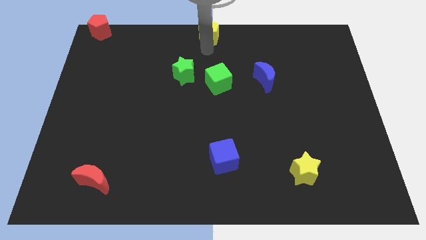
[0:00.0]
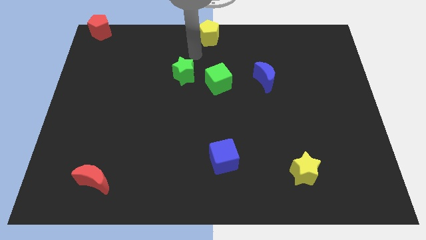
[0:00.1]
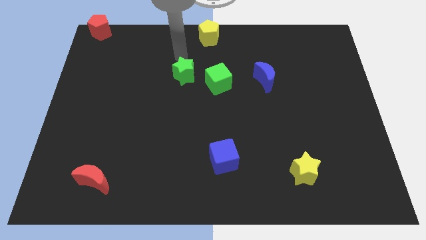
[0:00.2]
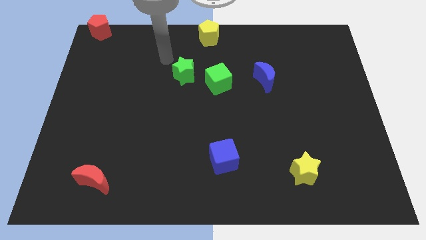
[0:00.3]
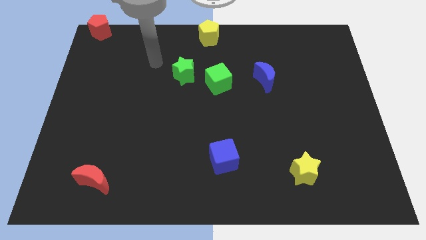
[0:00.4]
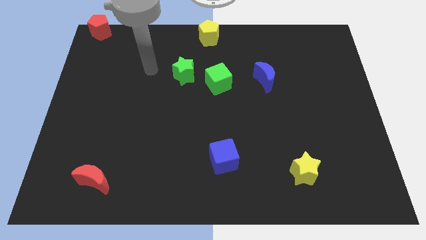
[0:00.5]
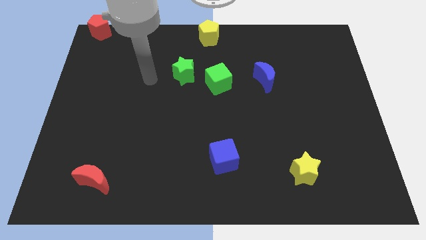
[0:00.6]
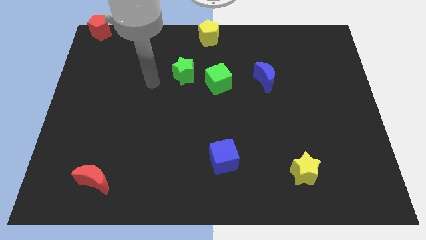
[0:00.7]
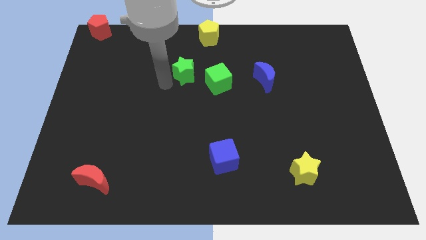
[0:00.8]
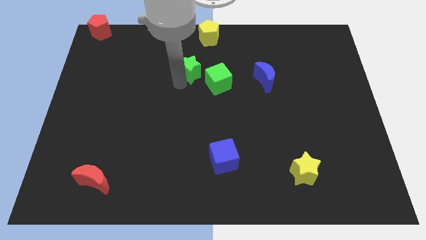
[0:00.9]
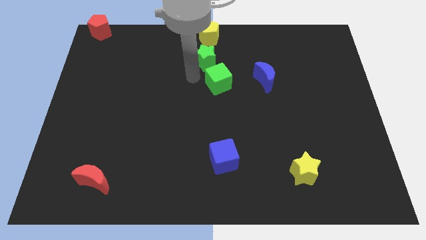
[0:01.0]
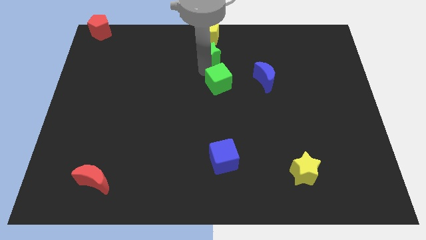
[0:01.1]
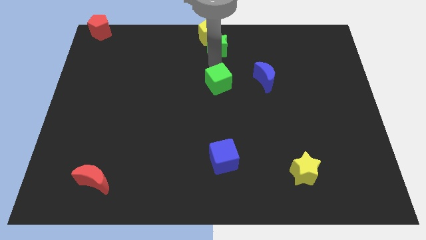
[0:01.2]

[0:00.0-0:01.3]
place the green star in between the green cube and yellow pentagon

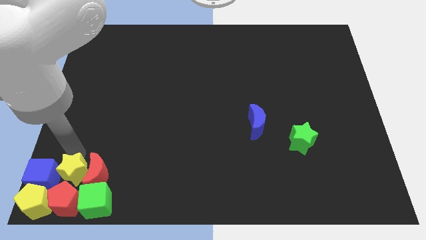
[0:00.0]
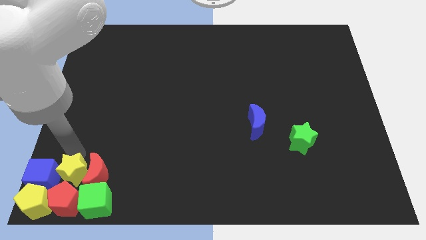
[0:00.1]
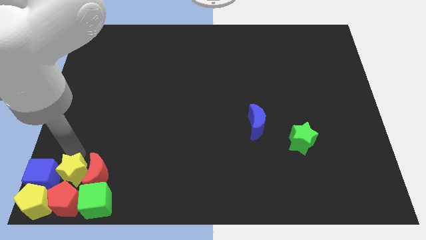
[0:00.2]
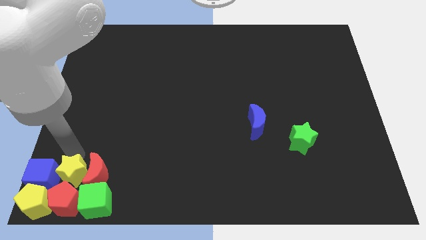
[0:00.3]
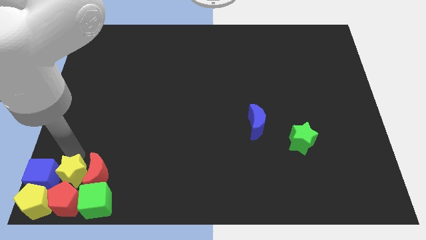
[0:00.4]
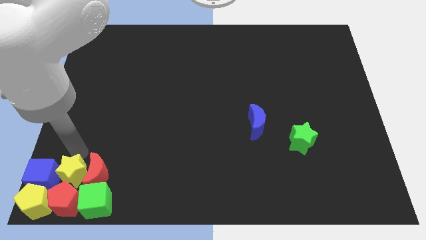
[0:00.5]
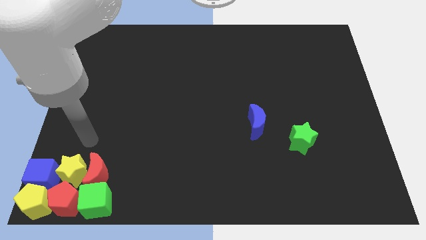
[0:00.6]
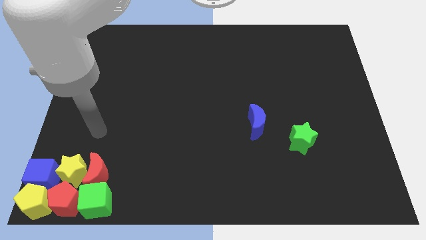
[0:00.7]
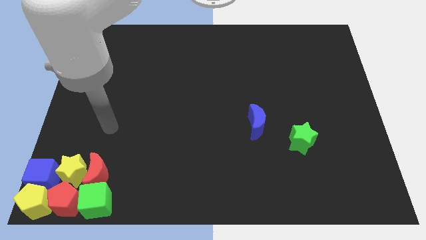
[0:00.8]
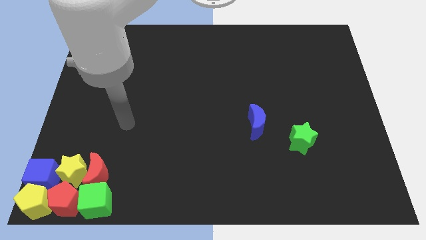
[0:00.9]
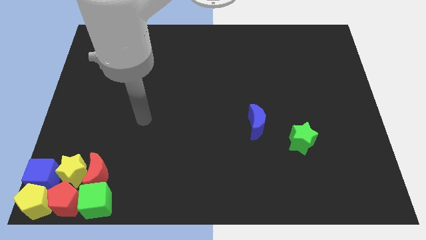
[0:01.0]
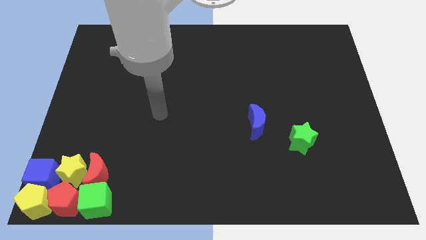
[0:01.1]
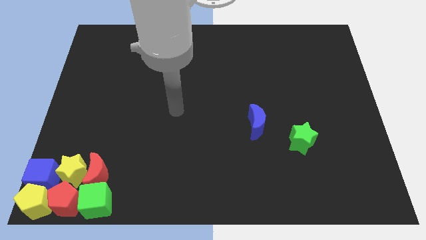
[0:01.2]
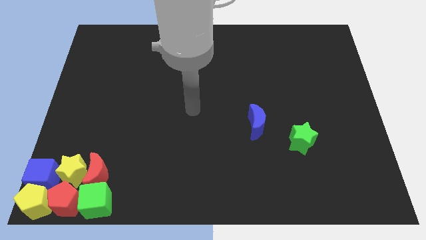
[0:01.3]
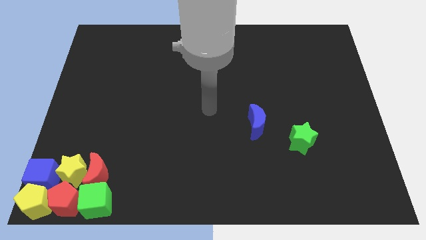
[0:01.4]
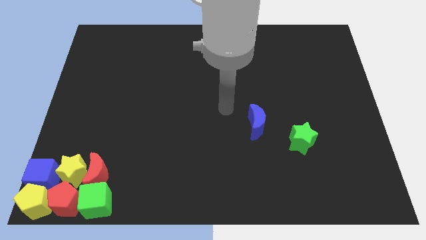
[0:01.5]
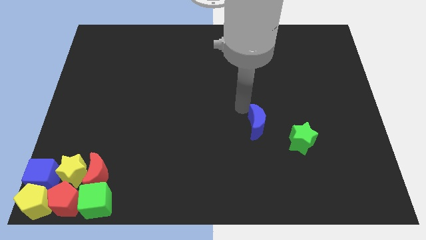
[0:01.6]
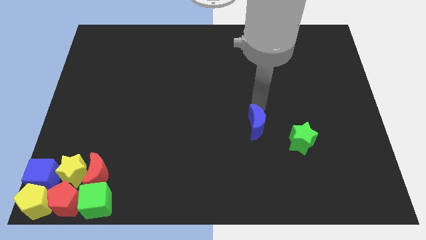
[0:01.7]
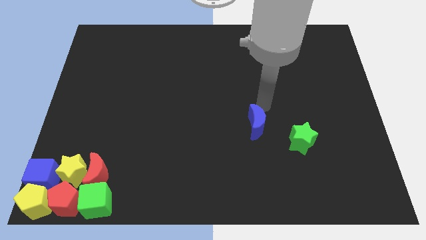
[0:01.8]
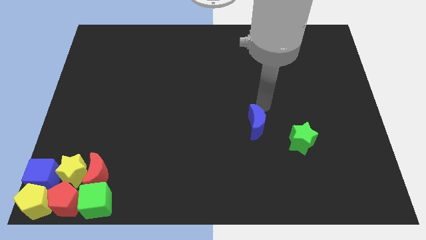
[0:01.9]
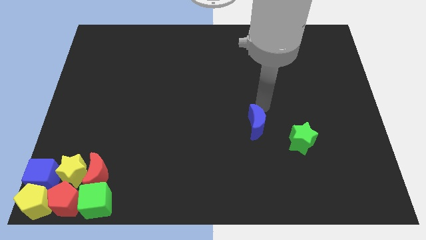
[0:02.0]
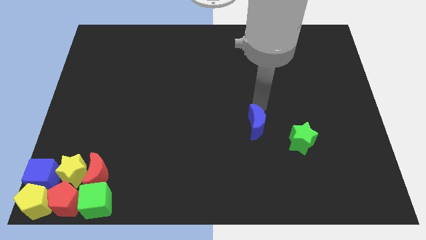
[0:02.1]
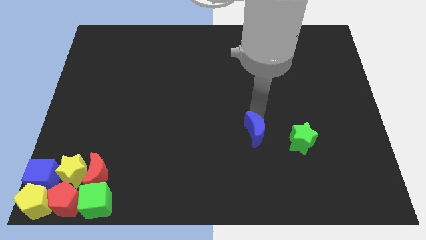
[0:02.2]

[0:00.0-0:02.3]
move the arm horizontally towards blue moon

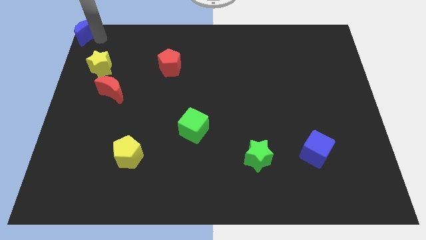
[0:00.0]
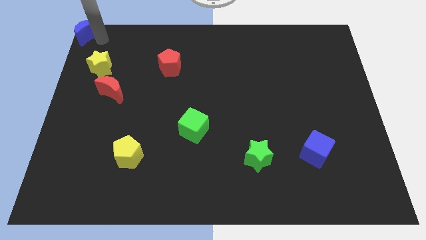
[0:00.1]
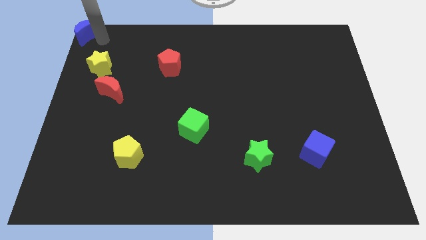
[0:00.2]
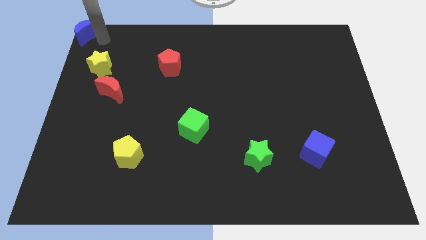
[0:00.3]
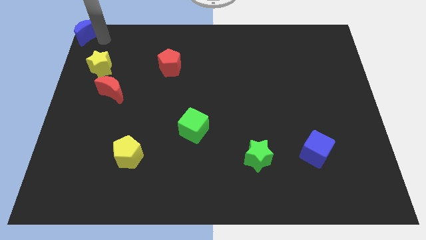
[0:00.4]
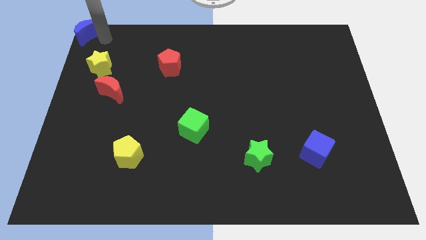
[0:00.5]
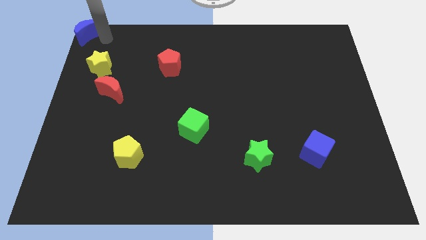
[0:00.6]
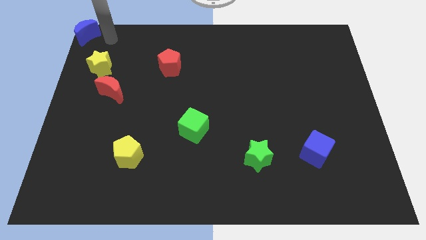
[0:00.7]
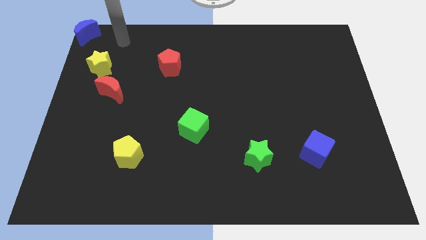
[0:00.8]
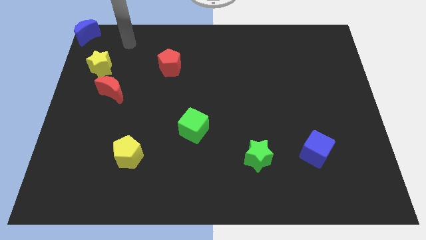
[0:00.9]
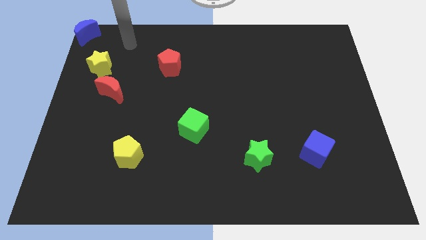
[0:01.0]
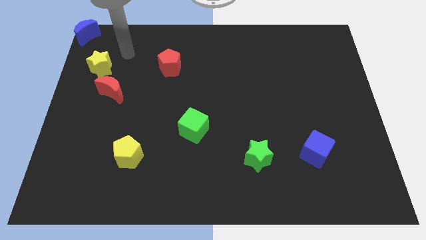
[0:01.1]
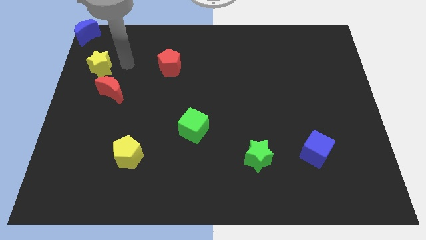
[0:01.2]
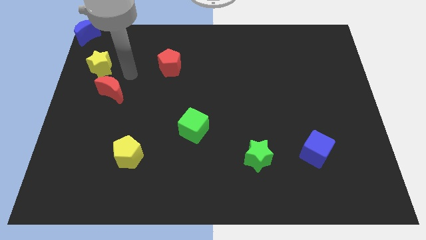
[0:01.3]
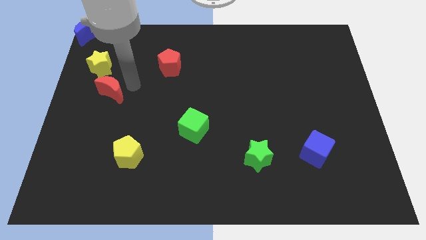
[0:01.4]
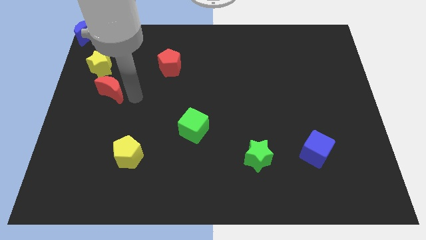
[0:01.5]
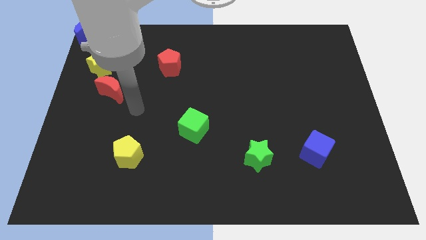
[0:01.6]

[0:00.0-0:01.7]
point your arm at the right side of the red crescent

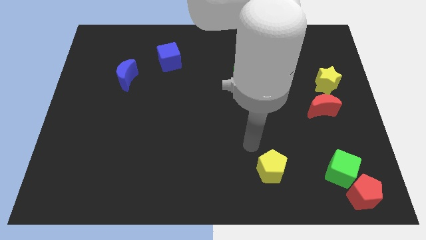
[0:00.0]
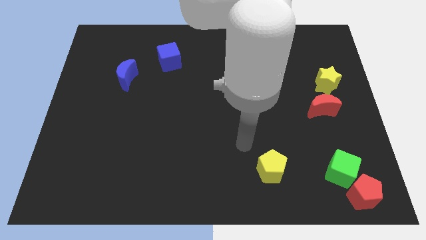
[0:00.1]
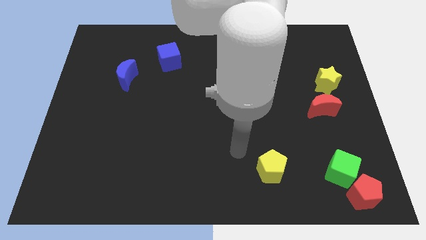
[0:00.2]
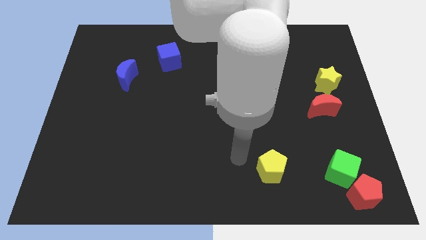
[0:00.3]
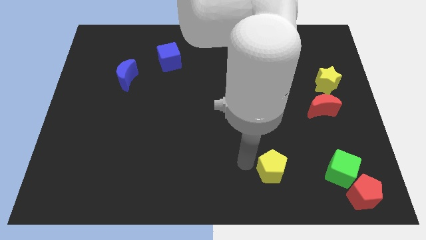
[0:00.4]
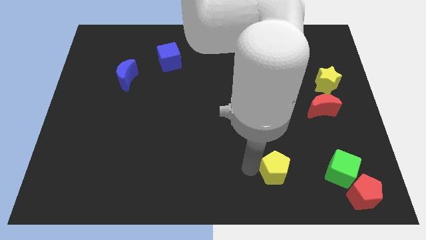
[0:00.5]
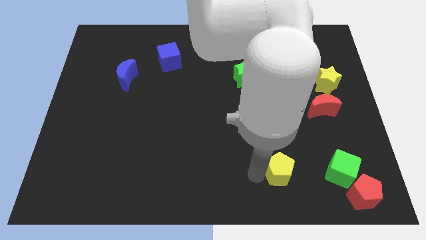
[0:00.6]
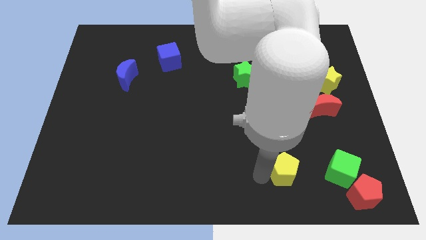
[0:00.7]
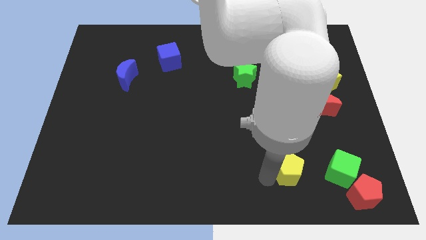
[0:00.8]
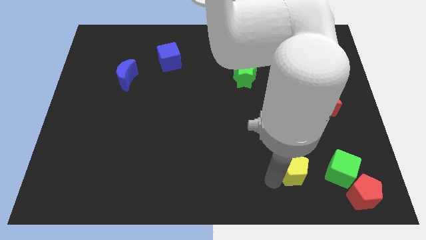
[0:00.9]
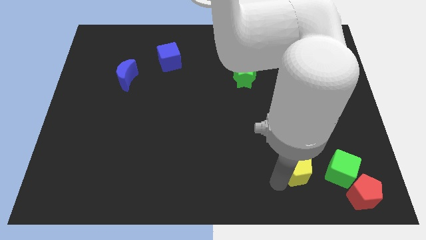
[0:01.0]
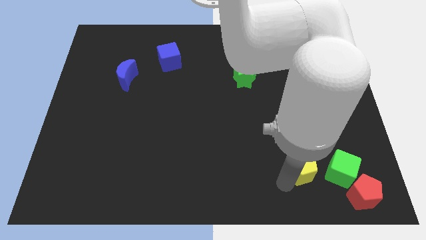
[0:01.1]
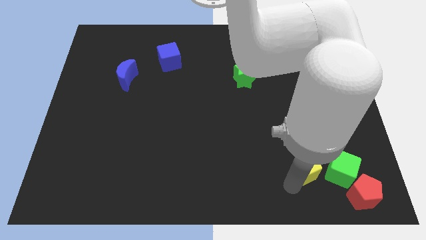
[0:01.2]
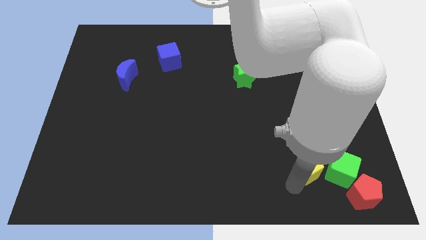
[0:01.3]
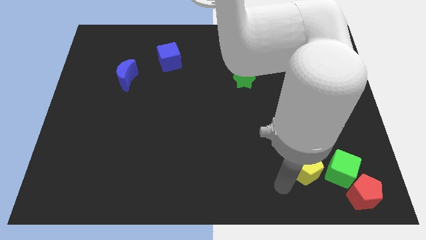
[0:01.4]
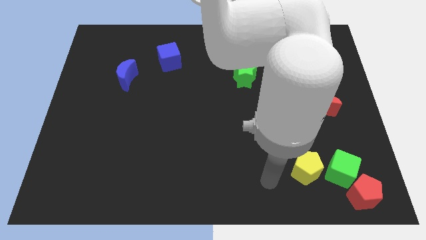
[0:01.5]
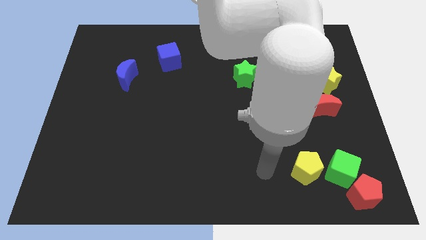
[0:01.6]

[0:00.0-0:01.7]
move yellow pentagon to the left of green cube

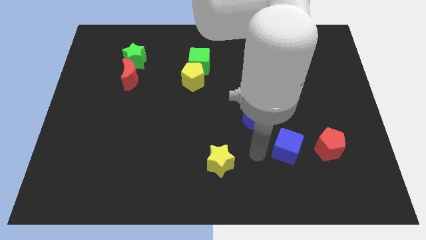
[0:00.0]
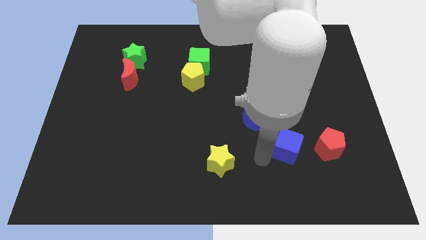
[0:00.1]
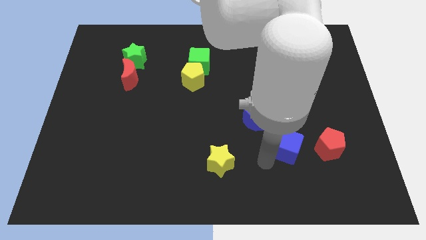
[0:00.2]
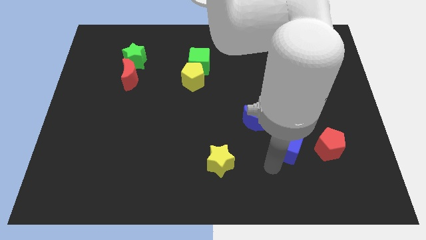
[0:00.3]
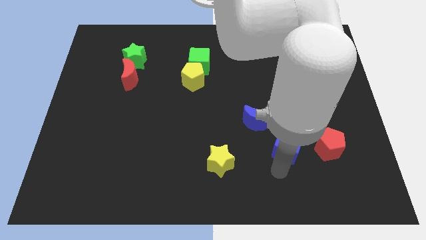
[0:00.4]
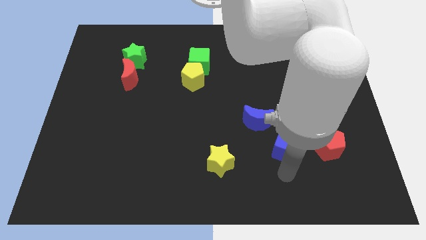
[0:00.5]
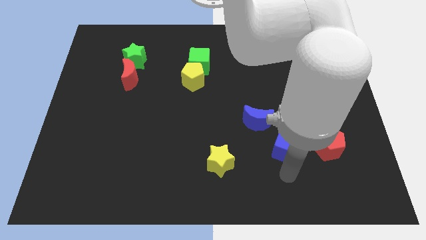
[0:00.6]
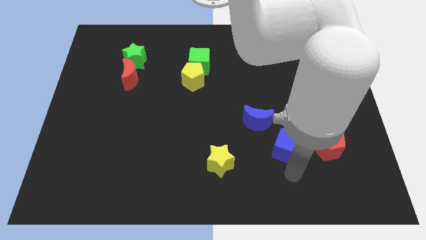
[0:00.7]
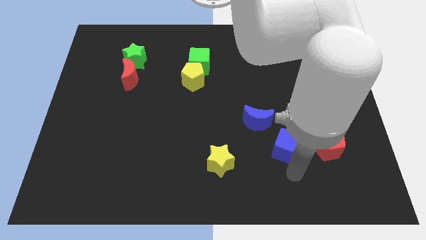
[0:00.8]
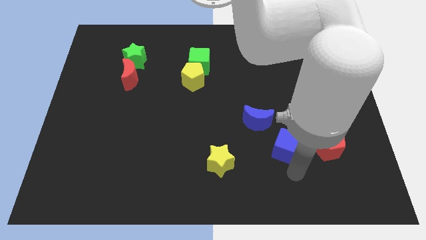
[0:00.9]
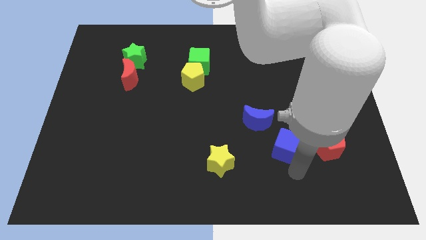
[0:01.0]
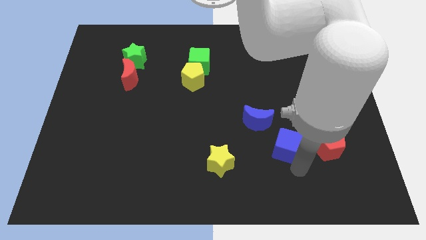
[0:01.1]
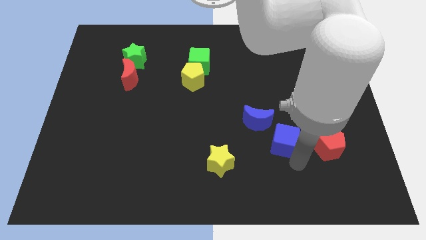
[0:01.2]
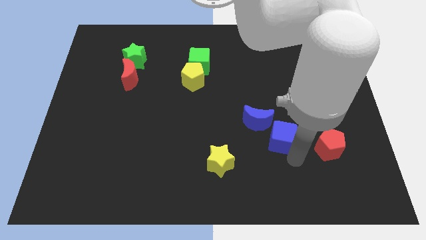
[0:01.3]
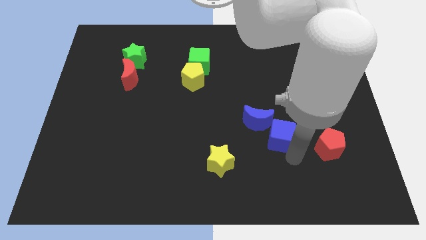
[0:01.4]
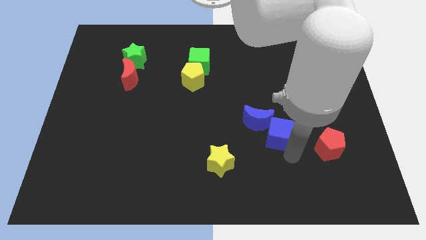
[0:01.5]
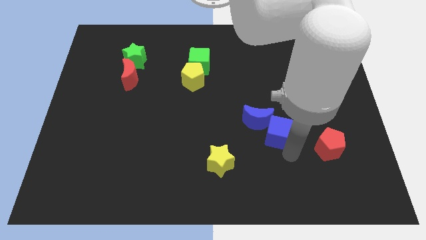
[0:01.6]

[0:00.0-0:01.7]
make the blue cube touch the bottom side of the blue moon

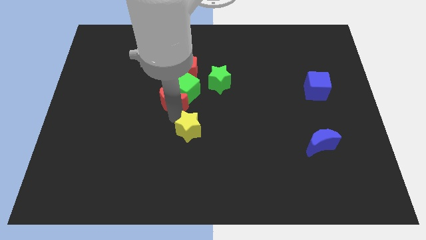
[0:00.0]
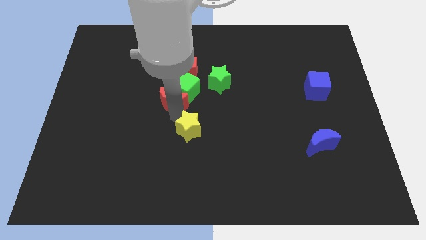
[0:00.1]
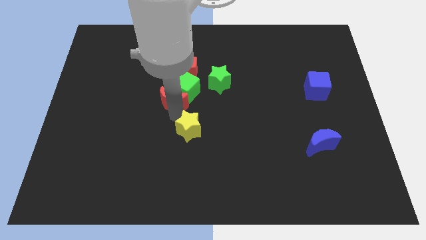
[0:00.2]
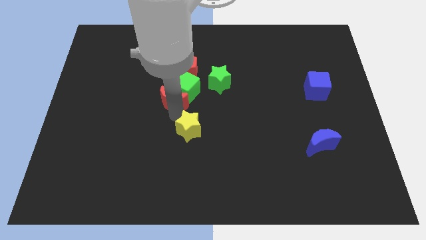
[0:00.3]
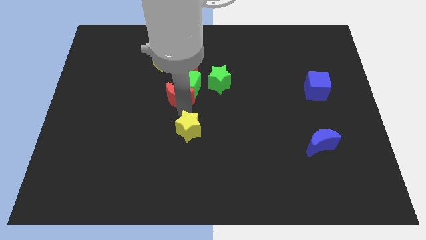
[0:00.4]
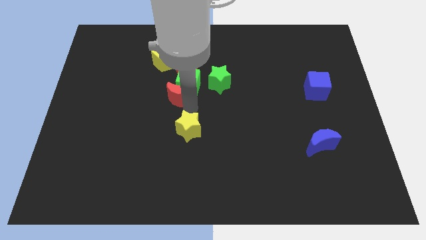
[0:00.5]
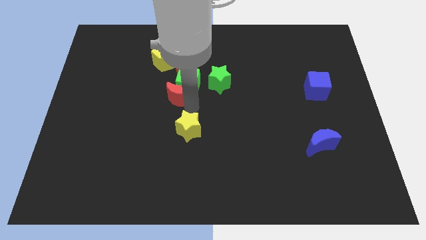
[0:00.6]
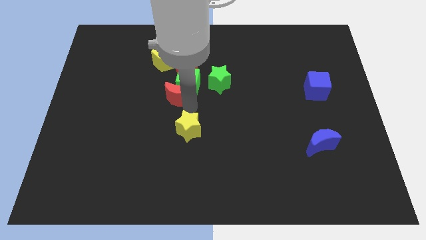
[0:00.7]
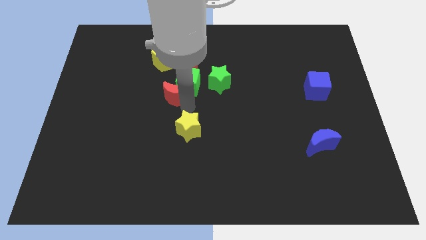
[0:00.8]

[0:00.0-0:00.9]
push red moon in green cube
